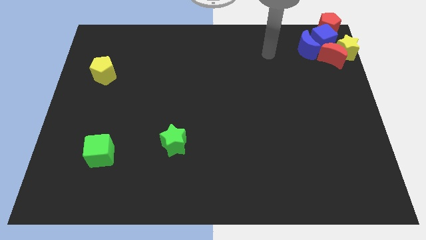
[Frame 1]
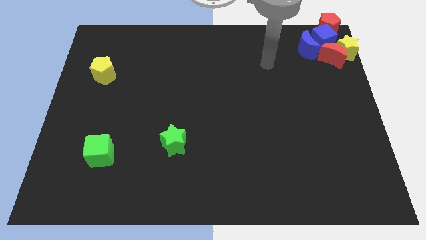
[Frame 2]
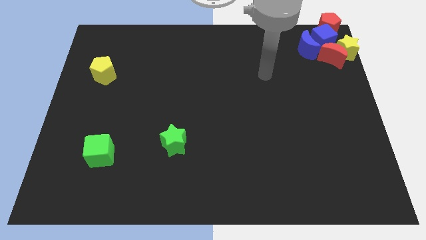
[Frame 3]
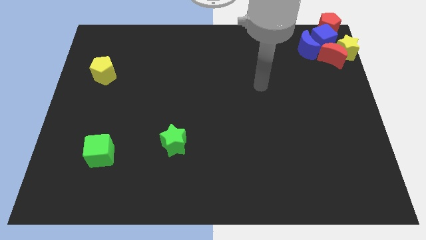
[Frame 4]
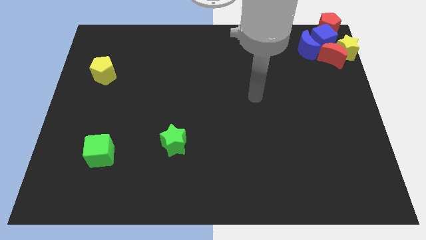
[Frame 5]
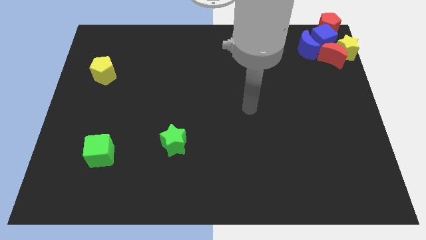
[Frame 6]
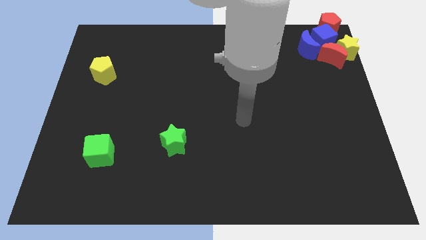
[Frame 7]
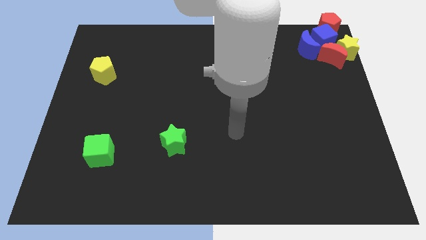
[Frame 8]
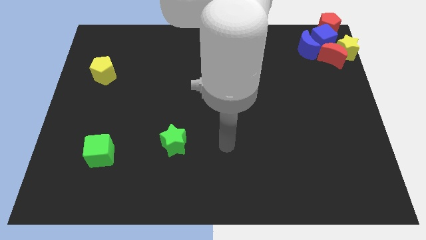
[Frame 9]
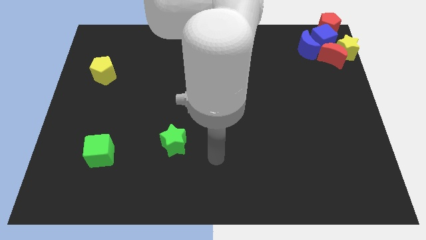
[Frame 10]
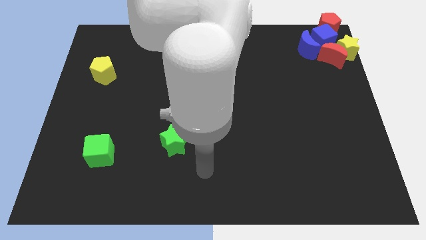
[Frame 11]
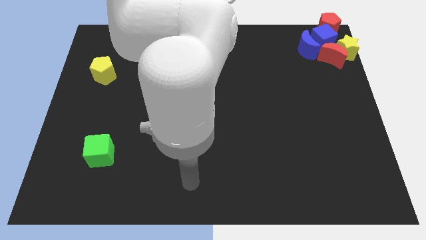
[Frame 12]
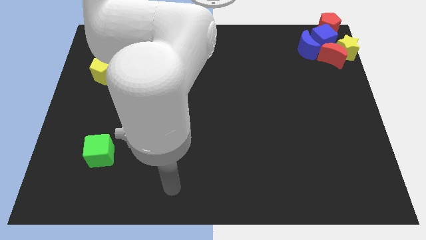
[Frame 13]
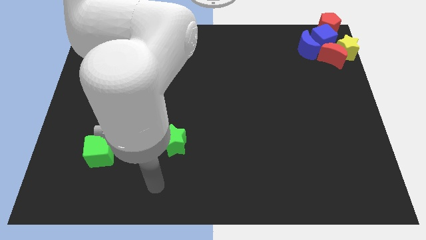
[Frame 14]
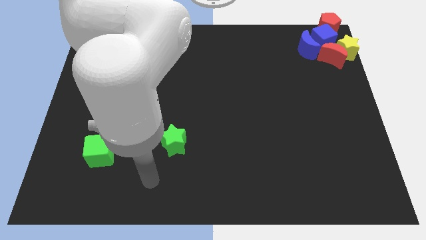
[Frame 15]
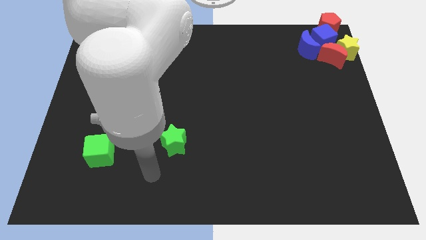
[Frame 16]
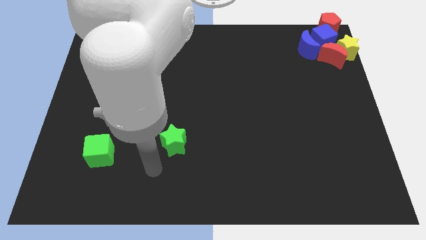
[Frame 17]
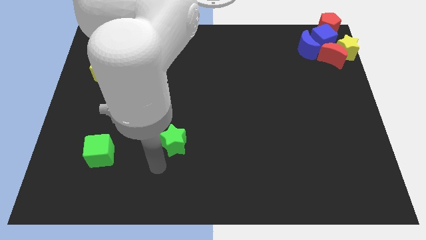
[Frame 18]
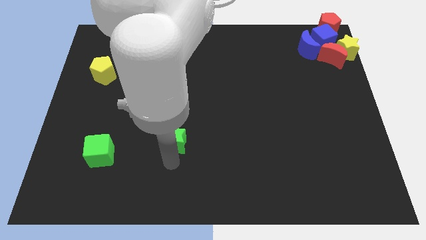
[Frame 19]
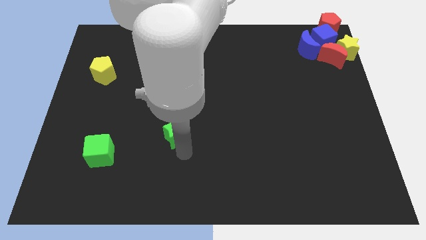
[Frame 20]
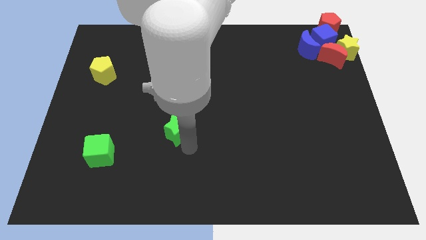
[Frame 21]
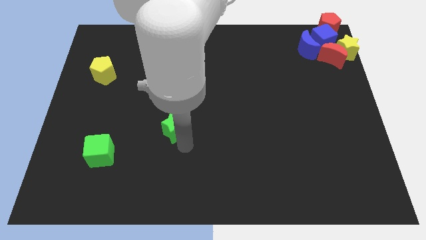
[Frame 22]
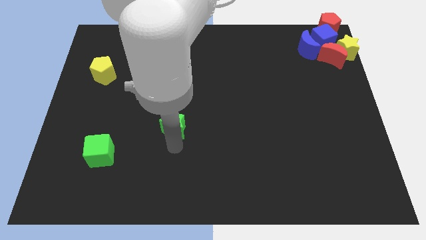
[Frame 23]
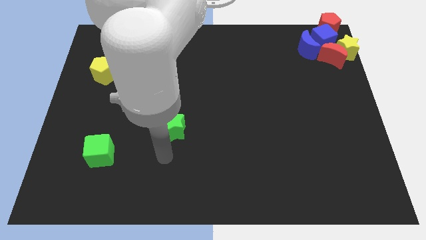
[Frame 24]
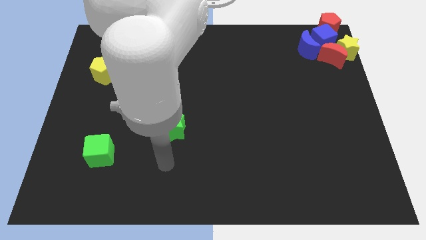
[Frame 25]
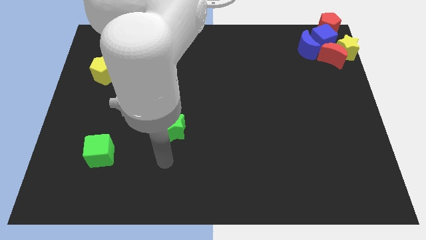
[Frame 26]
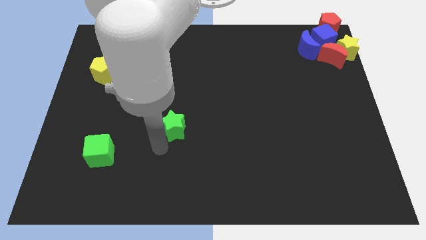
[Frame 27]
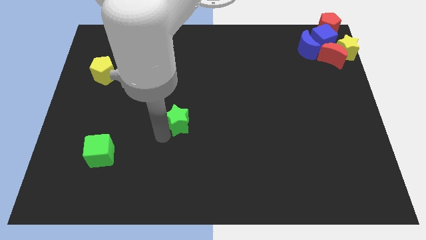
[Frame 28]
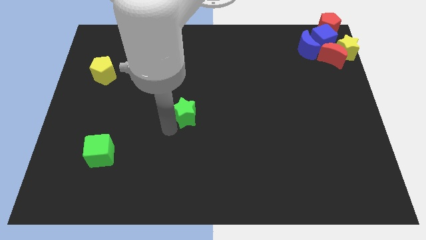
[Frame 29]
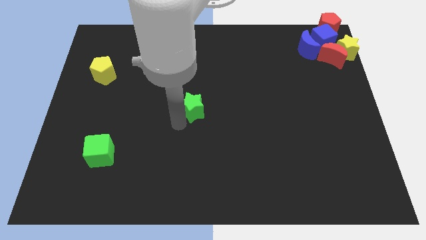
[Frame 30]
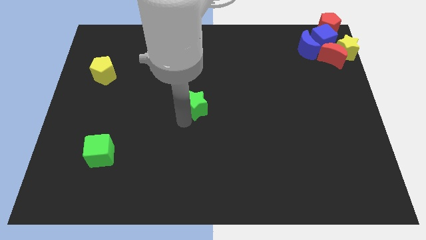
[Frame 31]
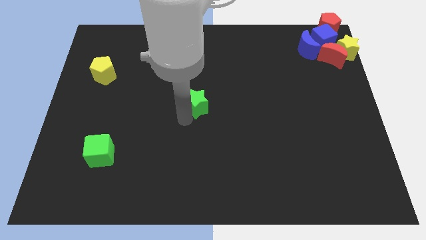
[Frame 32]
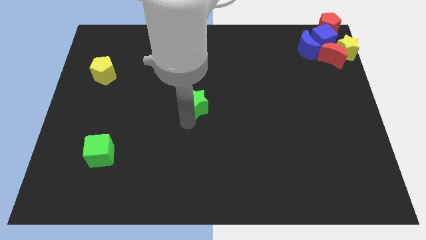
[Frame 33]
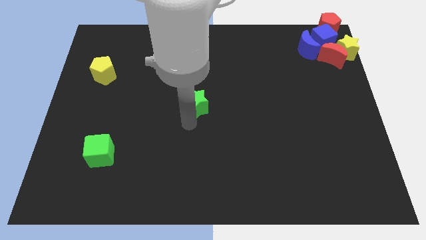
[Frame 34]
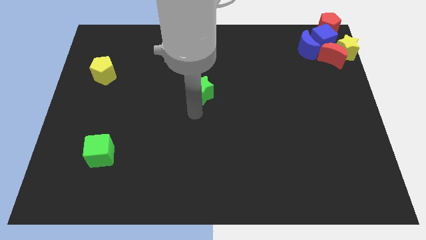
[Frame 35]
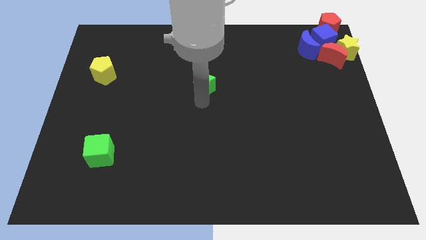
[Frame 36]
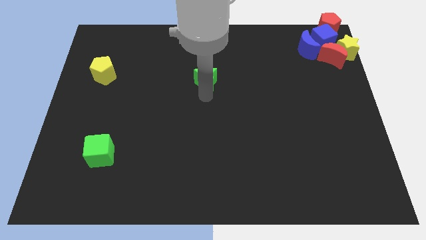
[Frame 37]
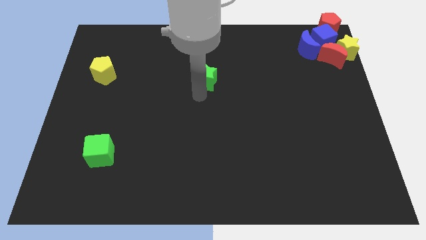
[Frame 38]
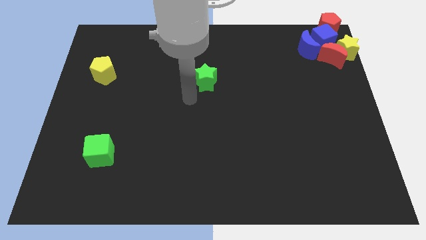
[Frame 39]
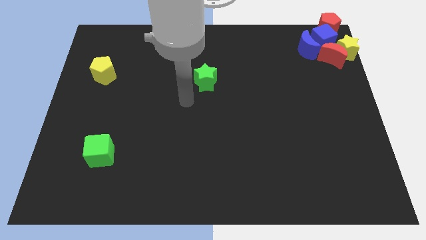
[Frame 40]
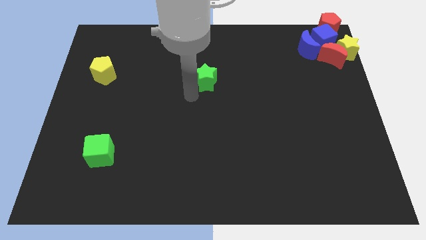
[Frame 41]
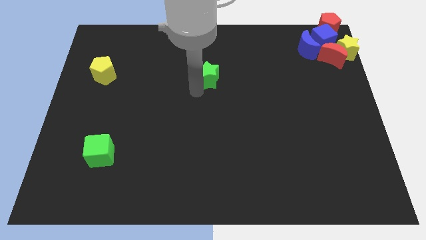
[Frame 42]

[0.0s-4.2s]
put the green star parallel right to the yellow pentagon

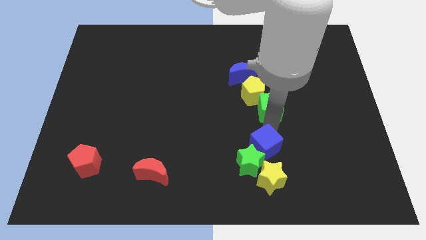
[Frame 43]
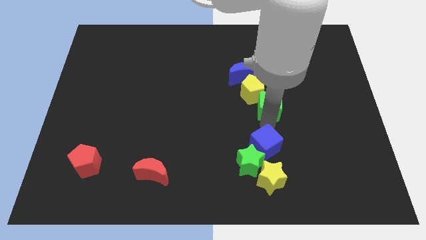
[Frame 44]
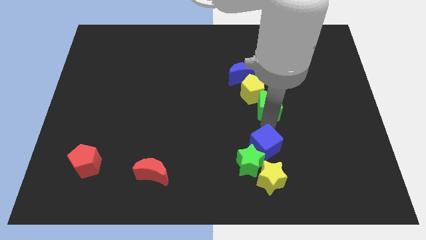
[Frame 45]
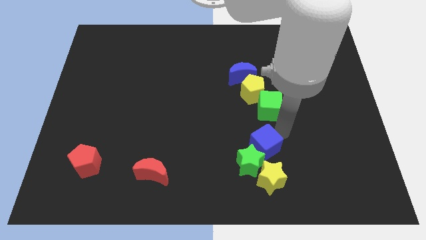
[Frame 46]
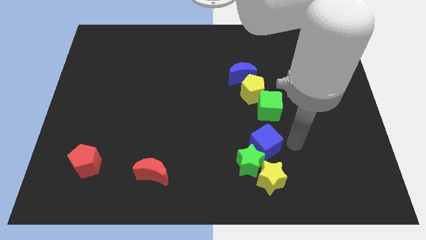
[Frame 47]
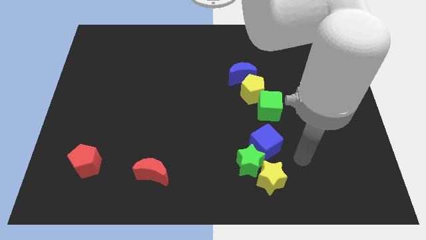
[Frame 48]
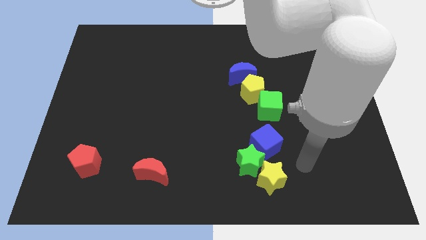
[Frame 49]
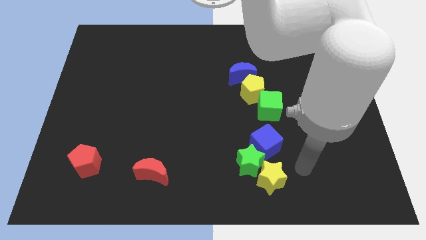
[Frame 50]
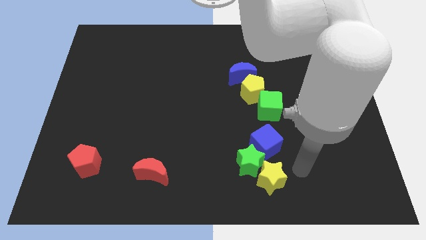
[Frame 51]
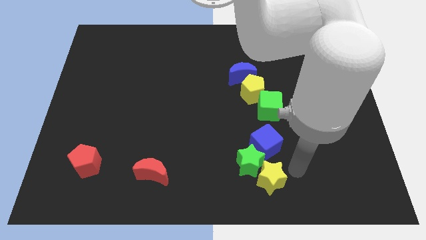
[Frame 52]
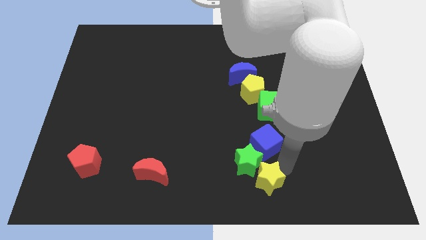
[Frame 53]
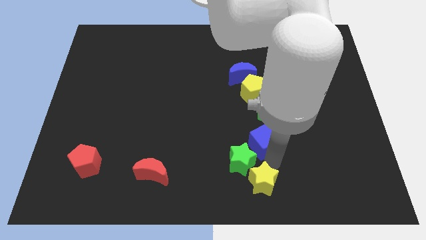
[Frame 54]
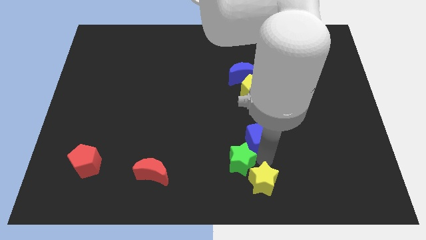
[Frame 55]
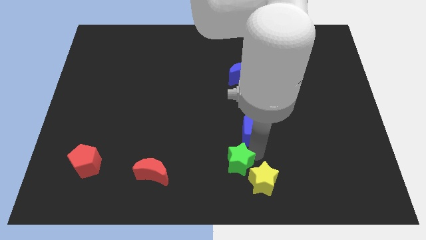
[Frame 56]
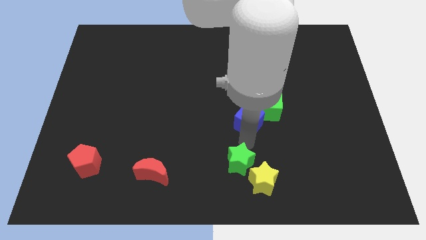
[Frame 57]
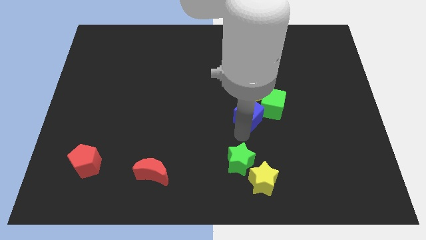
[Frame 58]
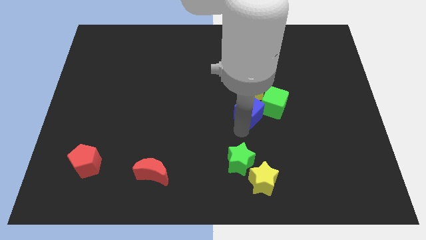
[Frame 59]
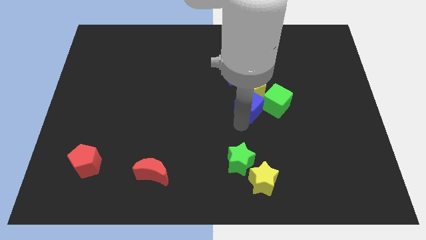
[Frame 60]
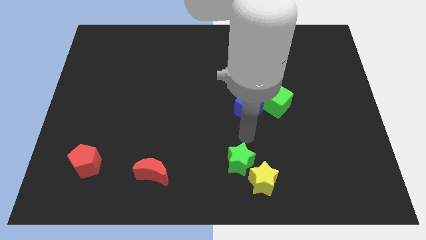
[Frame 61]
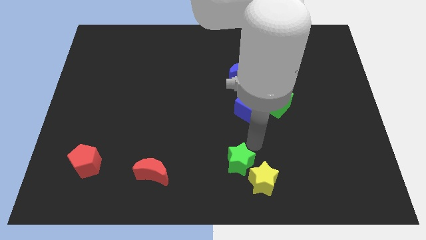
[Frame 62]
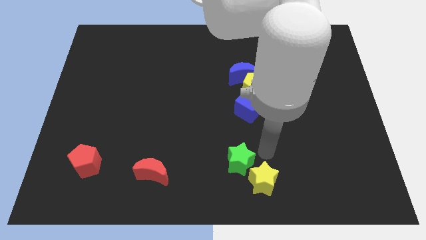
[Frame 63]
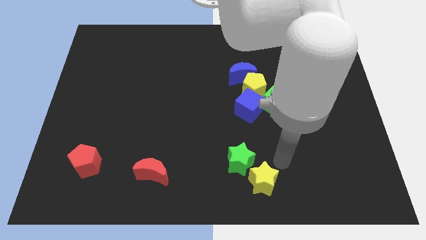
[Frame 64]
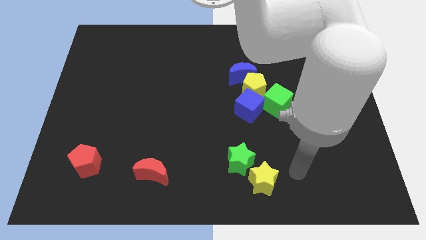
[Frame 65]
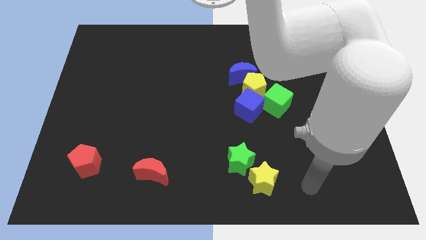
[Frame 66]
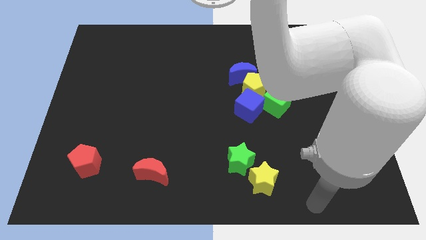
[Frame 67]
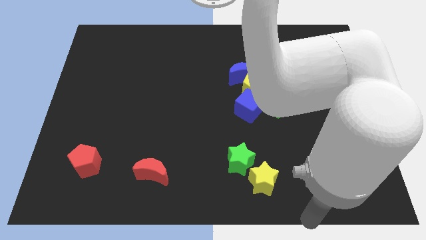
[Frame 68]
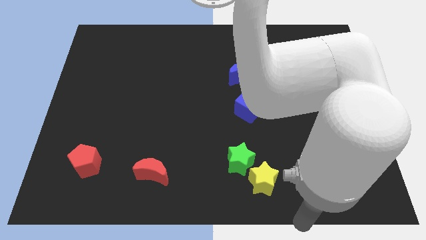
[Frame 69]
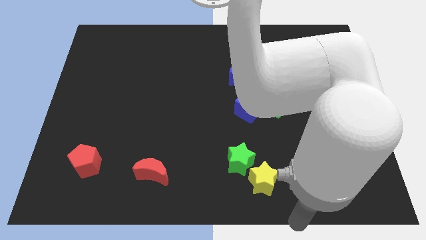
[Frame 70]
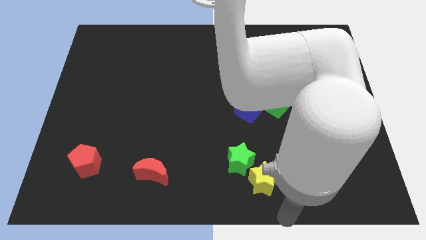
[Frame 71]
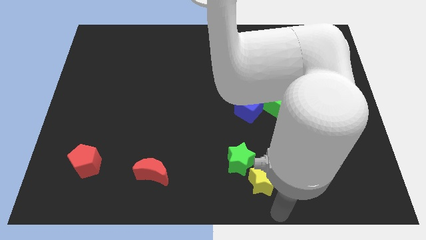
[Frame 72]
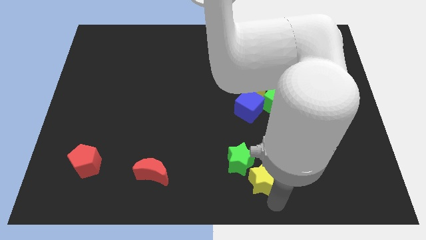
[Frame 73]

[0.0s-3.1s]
move the blue cube into the group of blocks

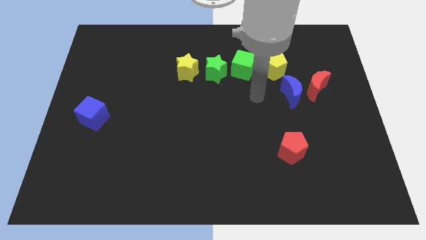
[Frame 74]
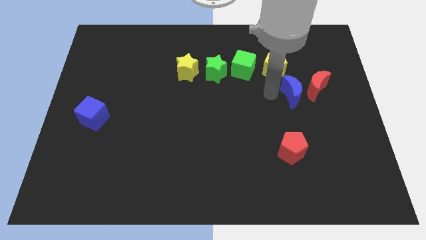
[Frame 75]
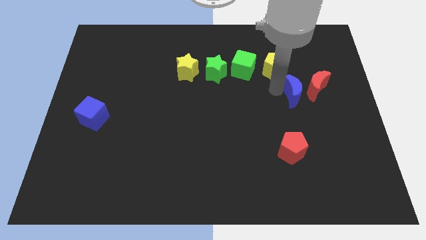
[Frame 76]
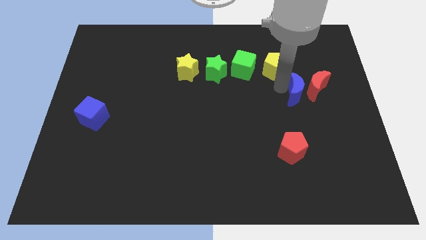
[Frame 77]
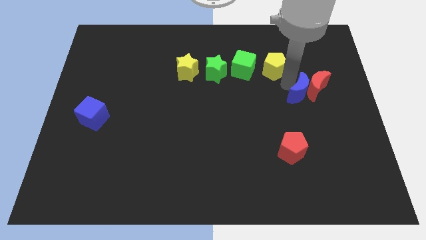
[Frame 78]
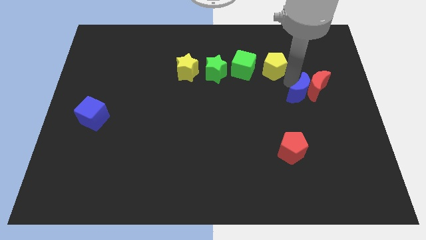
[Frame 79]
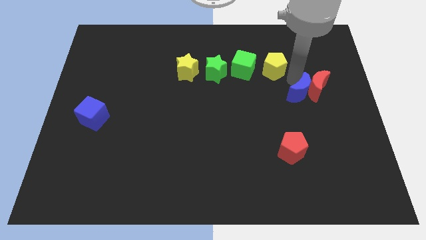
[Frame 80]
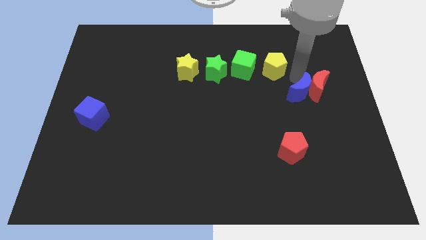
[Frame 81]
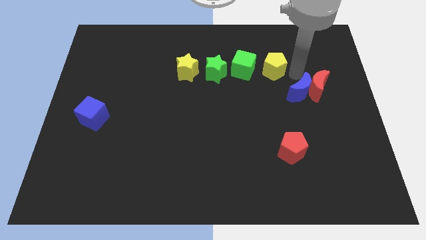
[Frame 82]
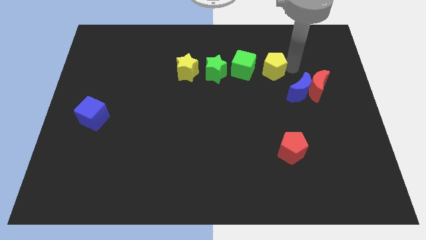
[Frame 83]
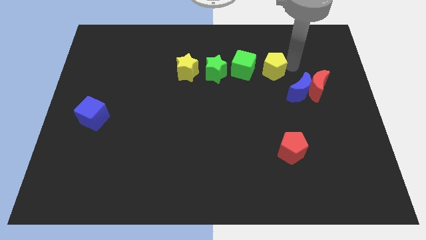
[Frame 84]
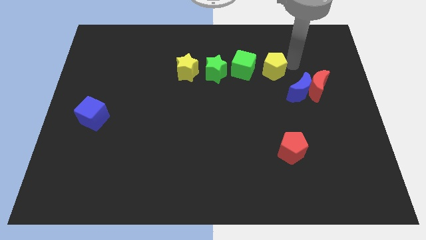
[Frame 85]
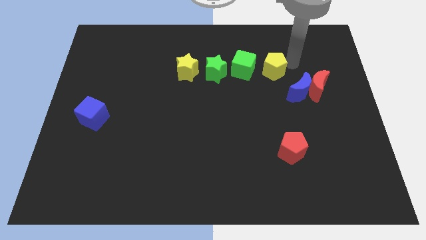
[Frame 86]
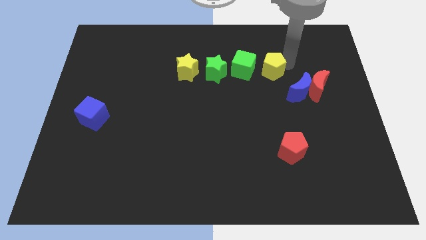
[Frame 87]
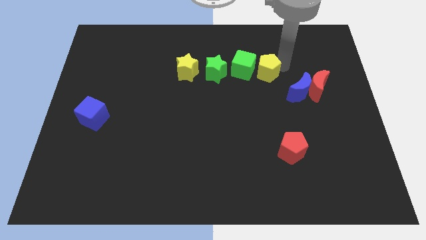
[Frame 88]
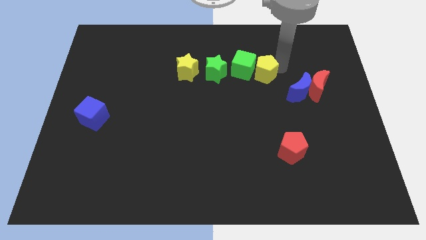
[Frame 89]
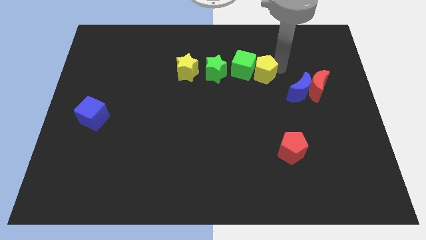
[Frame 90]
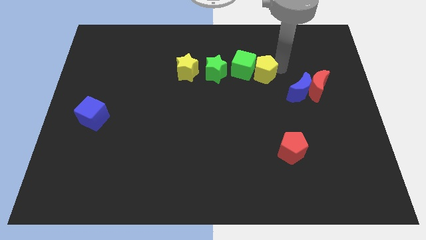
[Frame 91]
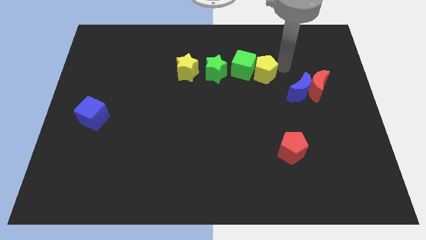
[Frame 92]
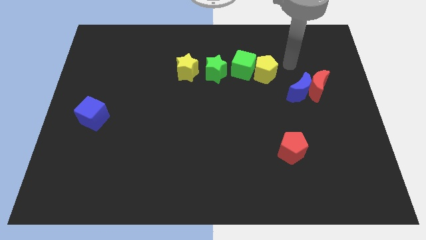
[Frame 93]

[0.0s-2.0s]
push the yellow pentagon and blue moon diagonally
